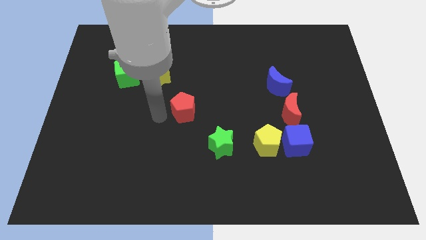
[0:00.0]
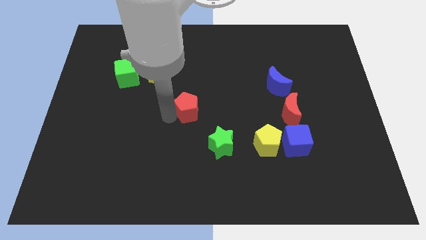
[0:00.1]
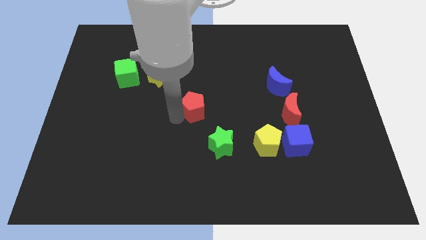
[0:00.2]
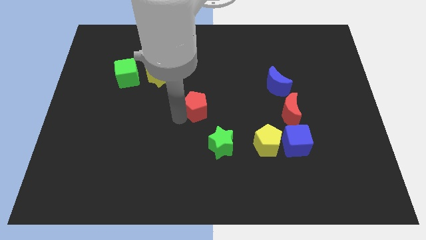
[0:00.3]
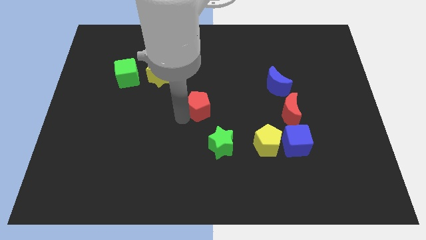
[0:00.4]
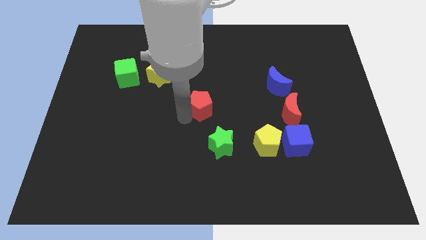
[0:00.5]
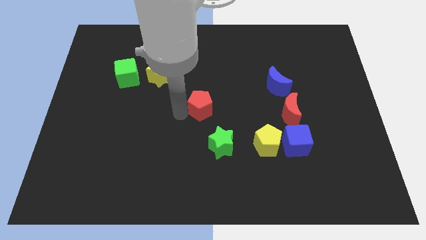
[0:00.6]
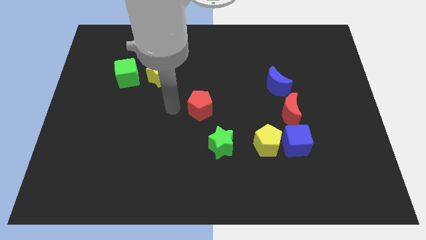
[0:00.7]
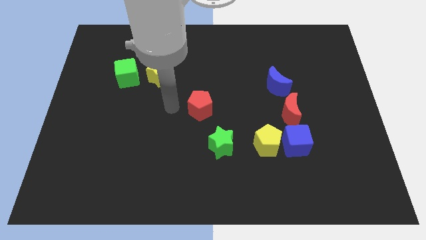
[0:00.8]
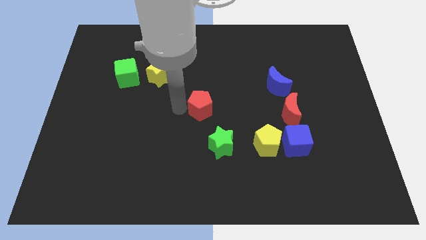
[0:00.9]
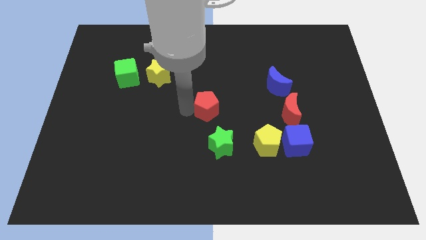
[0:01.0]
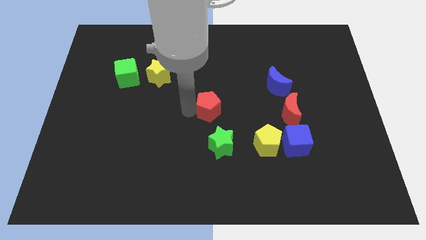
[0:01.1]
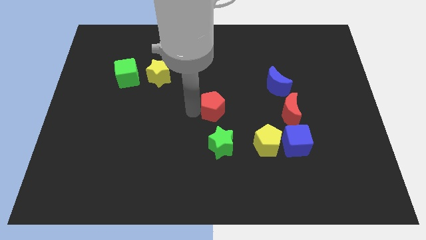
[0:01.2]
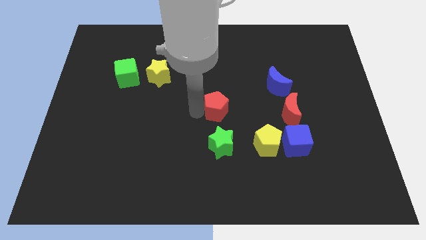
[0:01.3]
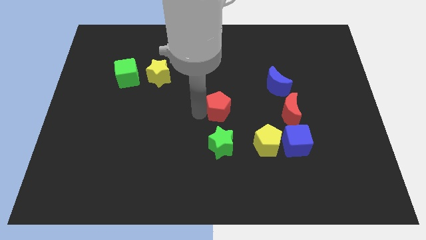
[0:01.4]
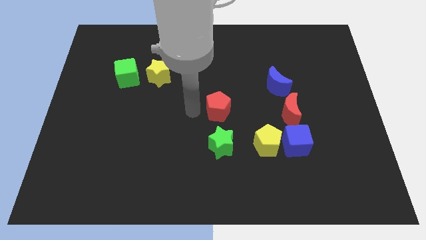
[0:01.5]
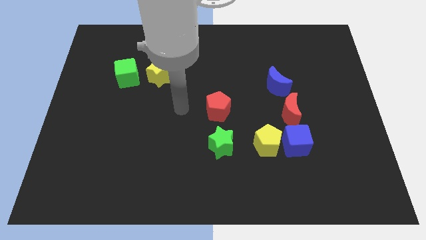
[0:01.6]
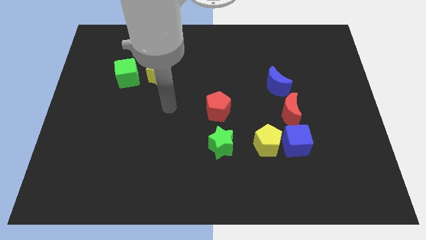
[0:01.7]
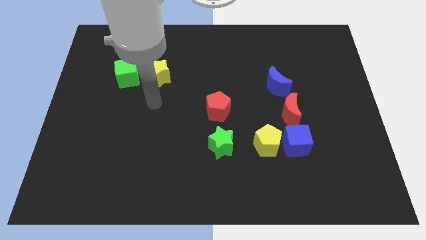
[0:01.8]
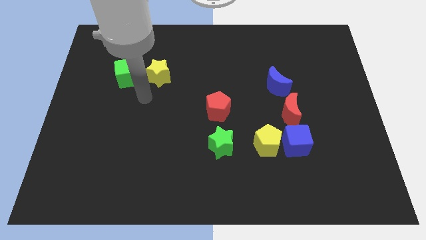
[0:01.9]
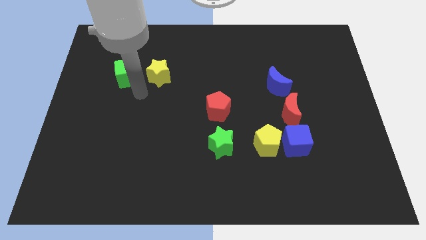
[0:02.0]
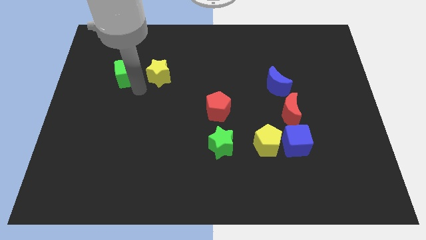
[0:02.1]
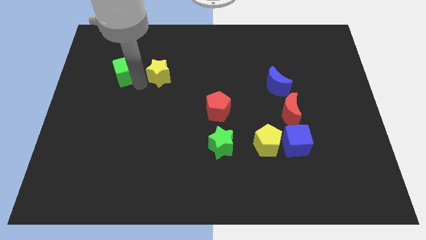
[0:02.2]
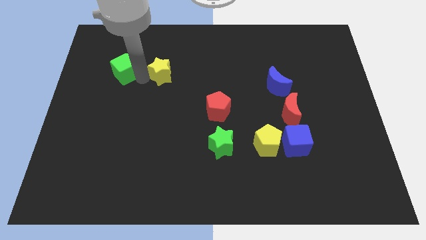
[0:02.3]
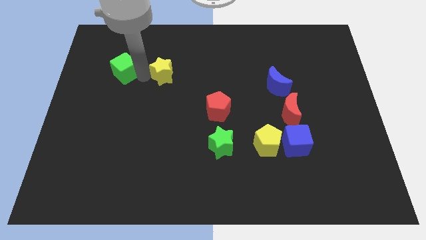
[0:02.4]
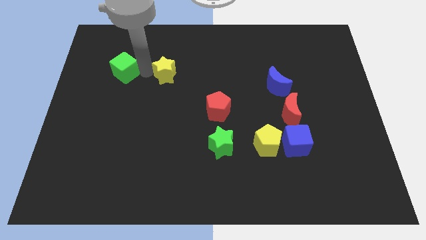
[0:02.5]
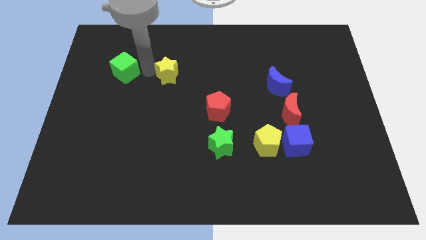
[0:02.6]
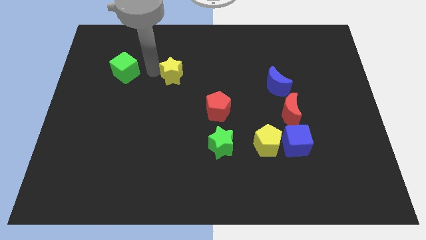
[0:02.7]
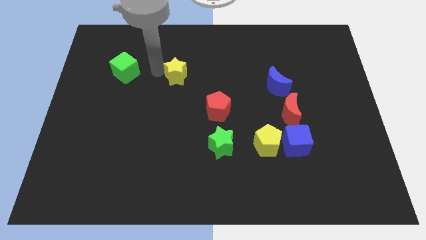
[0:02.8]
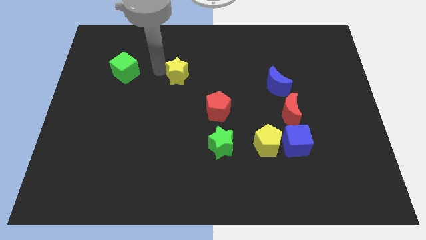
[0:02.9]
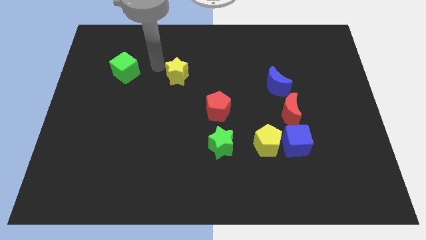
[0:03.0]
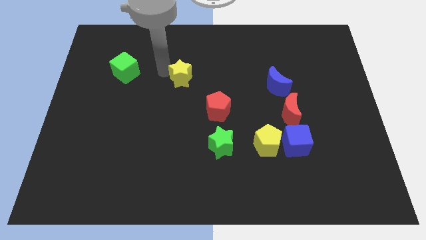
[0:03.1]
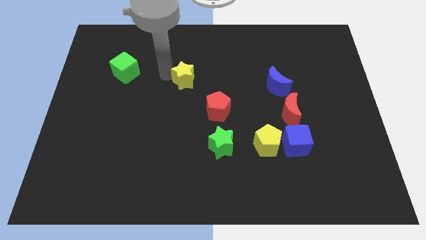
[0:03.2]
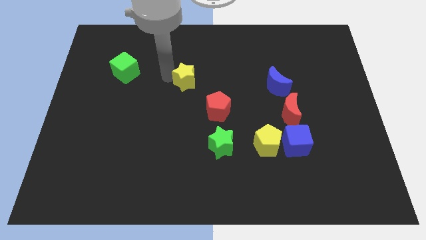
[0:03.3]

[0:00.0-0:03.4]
place the red pentagon towards the center of the board

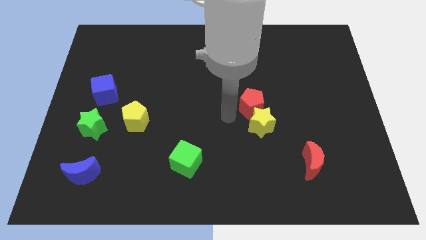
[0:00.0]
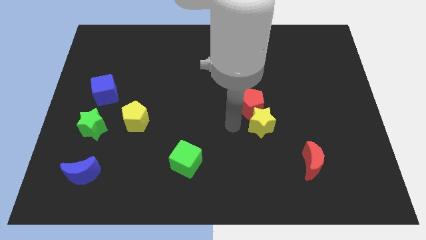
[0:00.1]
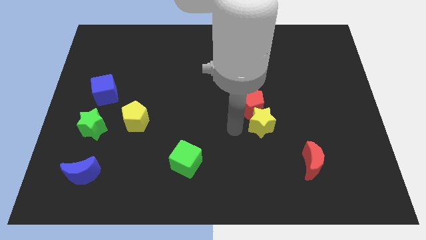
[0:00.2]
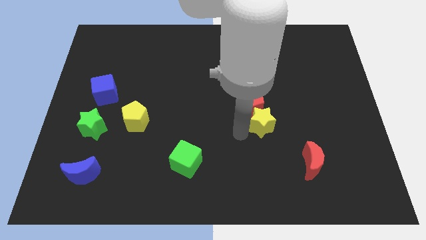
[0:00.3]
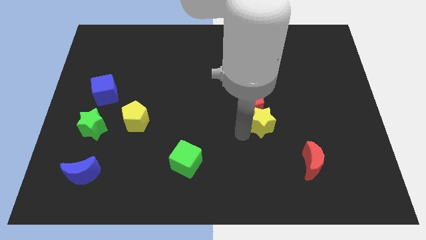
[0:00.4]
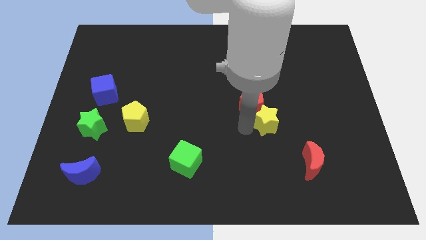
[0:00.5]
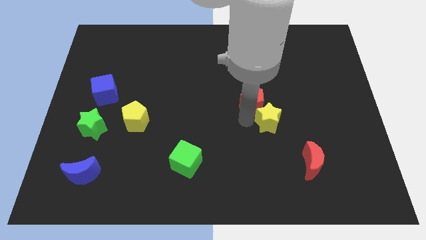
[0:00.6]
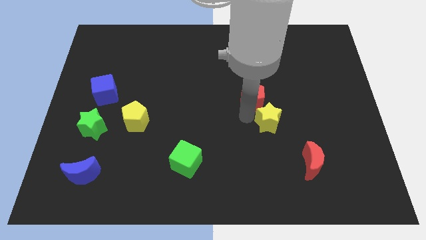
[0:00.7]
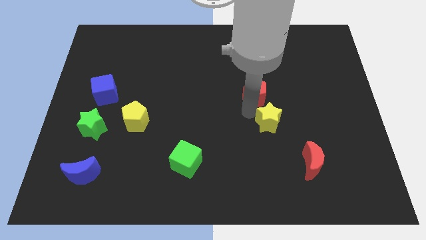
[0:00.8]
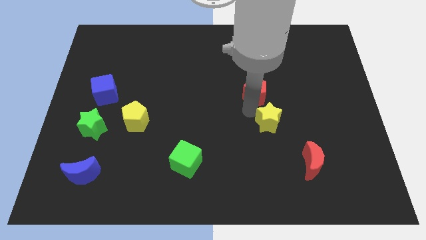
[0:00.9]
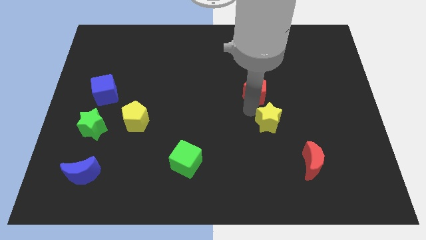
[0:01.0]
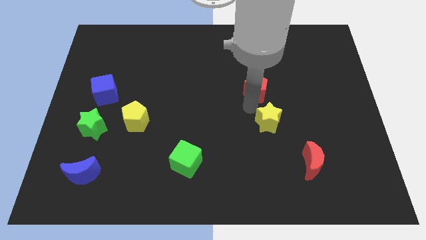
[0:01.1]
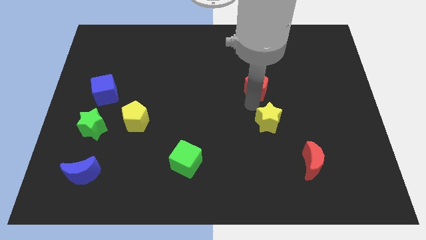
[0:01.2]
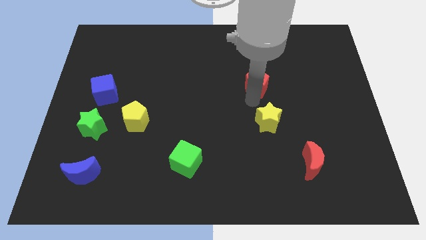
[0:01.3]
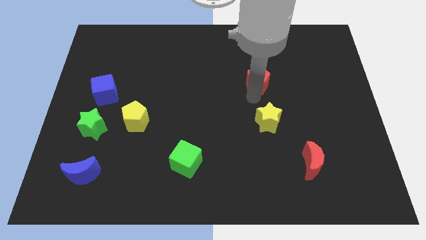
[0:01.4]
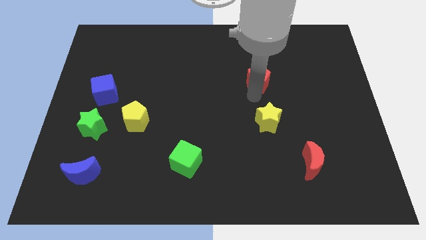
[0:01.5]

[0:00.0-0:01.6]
separate red pentagon from yellow star

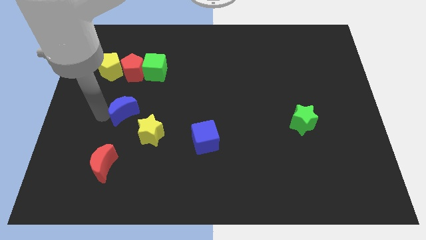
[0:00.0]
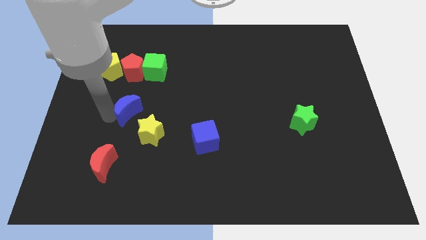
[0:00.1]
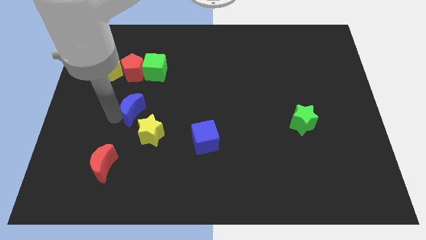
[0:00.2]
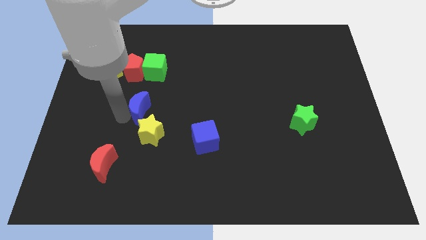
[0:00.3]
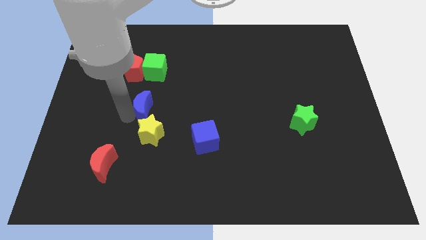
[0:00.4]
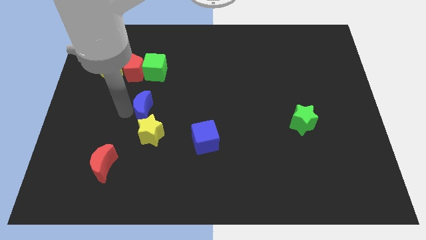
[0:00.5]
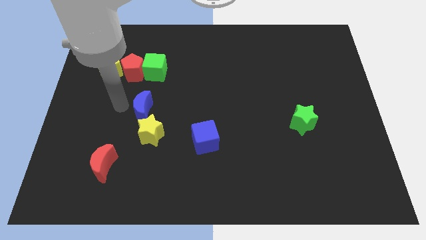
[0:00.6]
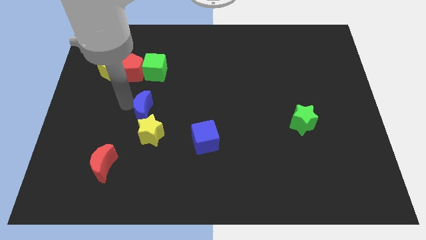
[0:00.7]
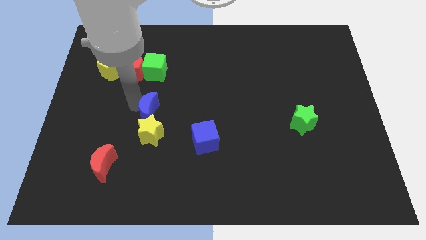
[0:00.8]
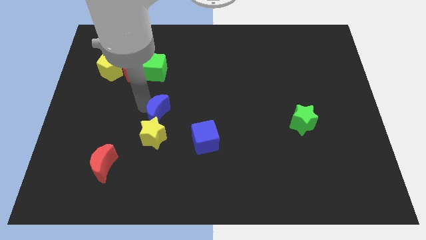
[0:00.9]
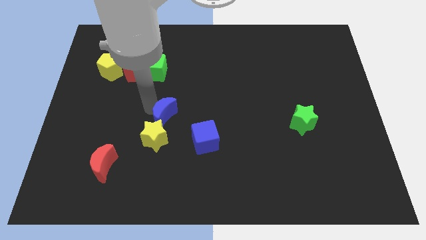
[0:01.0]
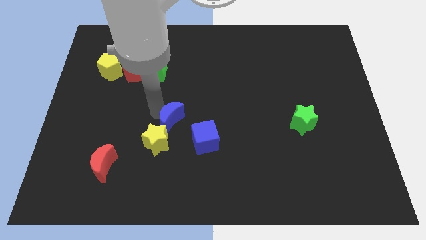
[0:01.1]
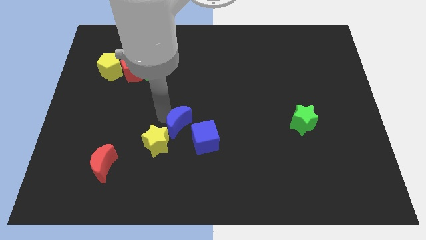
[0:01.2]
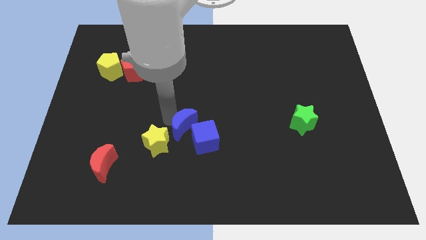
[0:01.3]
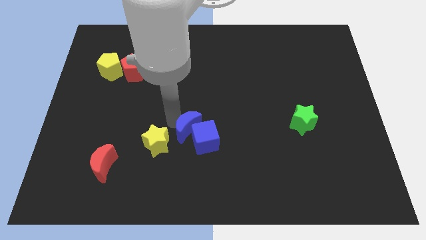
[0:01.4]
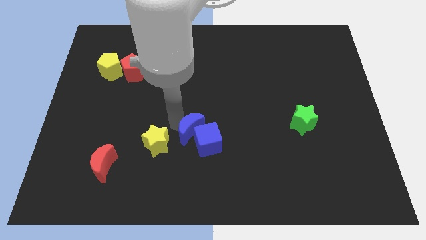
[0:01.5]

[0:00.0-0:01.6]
push the blue moon into the blue cube

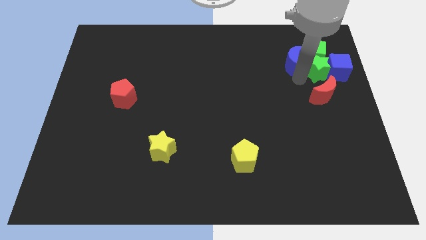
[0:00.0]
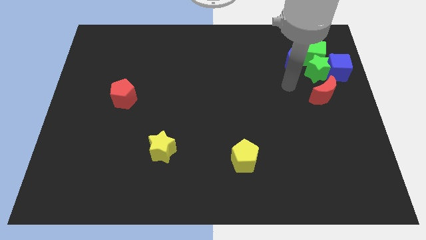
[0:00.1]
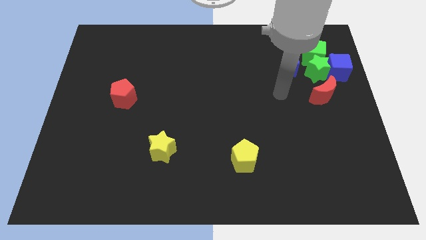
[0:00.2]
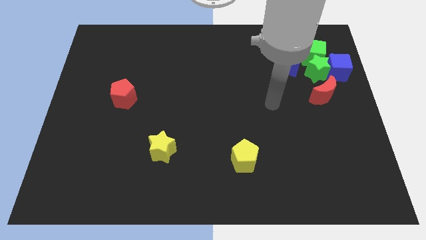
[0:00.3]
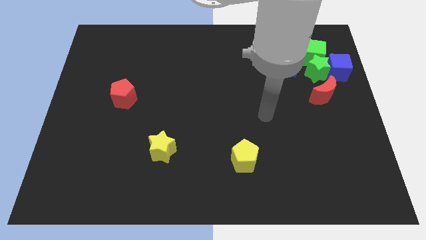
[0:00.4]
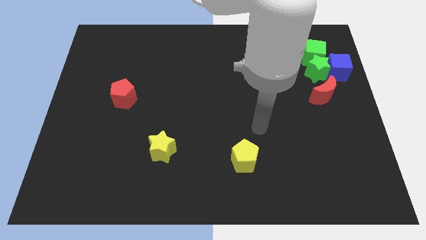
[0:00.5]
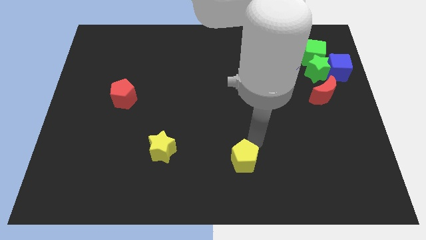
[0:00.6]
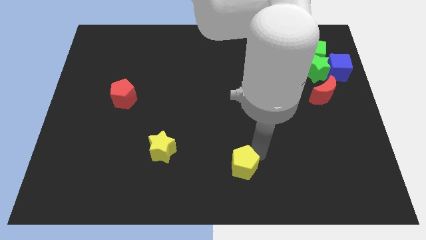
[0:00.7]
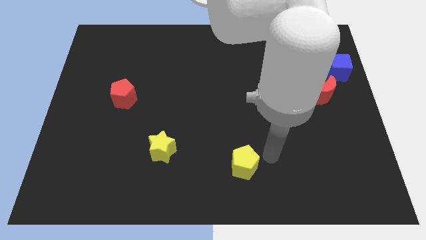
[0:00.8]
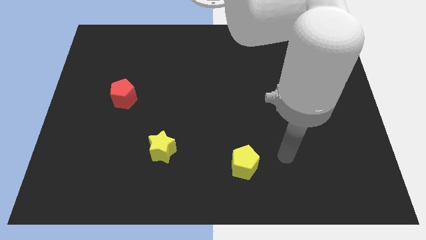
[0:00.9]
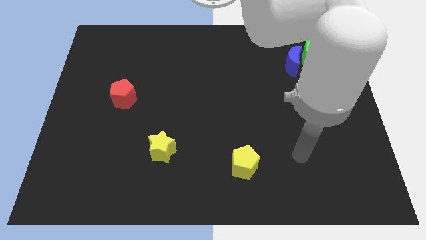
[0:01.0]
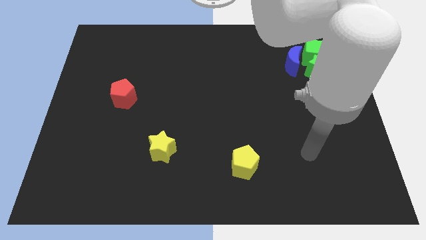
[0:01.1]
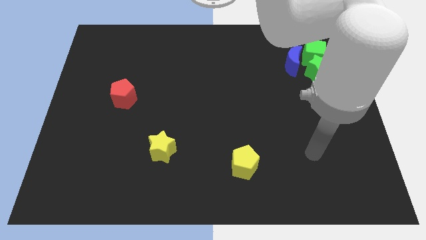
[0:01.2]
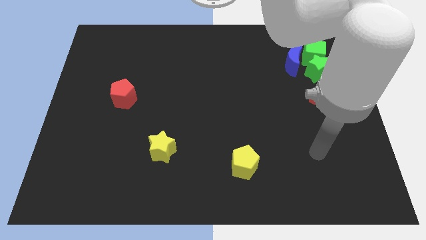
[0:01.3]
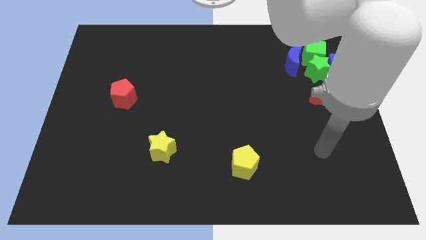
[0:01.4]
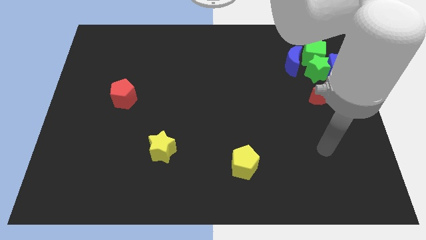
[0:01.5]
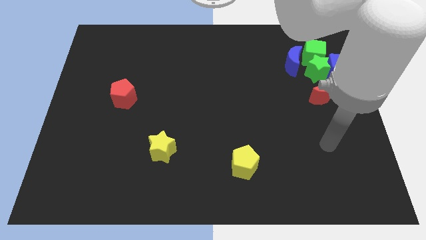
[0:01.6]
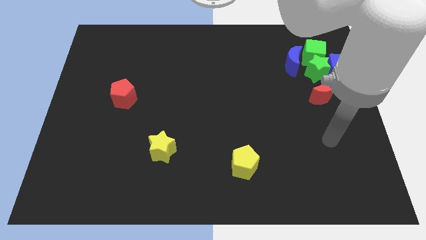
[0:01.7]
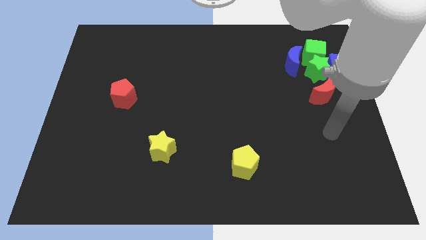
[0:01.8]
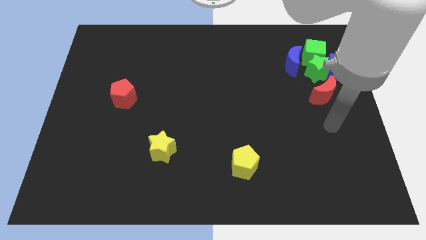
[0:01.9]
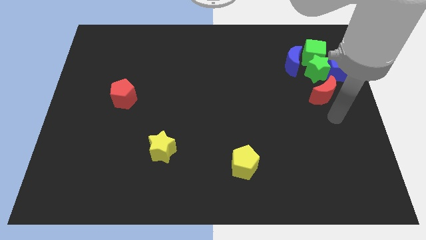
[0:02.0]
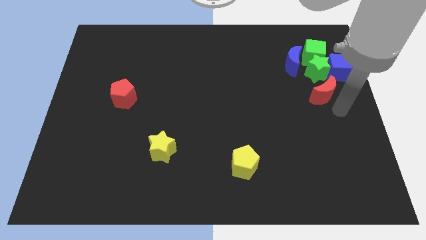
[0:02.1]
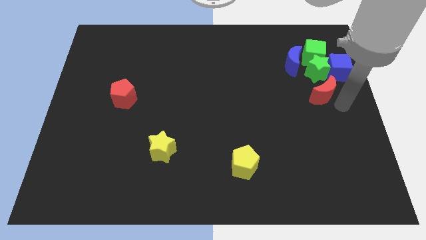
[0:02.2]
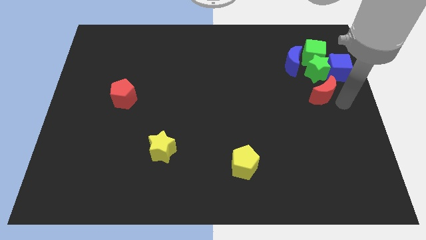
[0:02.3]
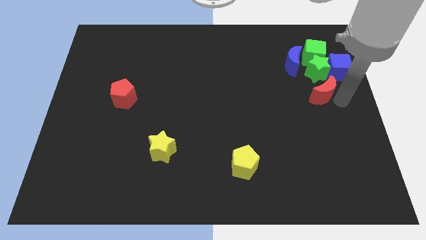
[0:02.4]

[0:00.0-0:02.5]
touch the yellow pentagon at the top
